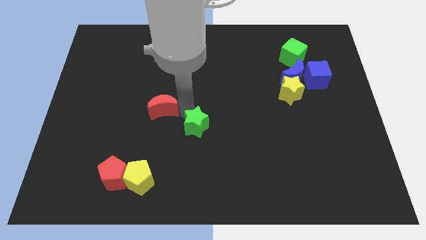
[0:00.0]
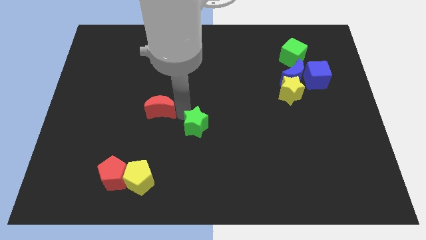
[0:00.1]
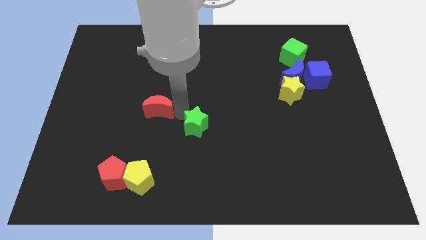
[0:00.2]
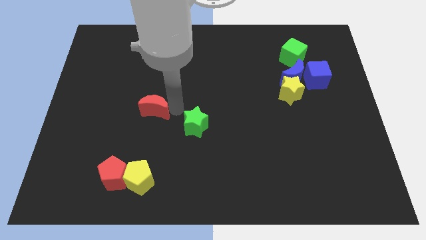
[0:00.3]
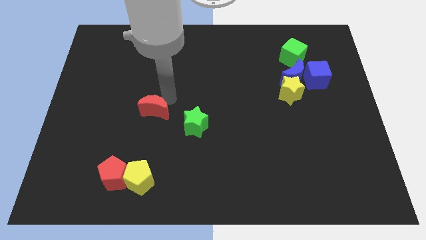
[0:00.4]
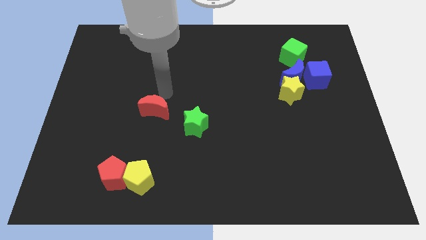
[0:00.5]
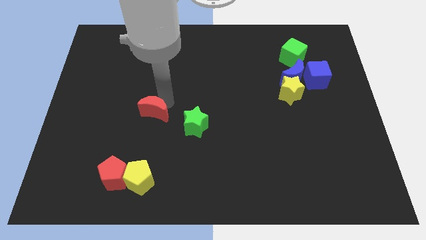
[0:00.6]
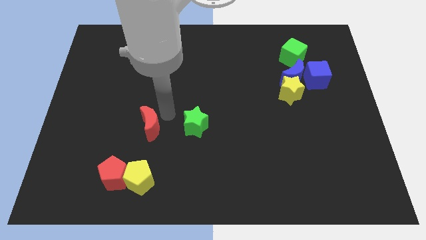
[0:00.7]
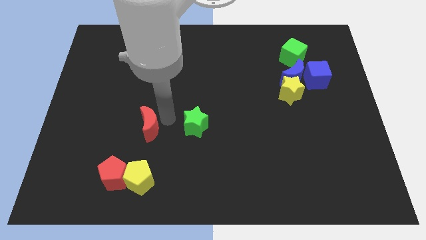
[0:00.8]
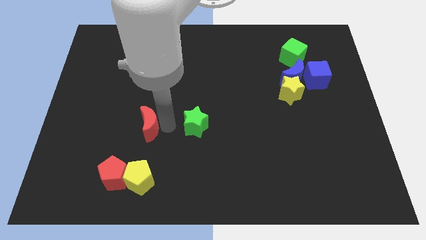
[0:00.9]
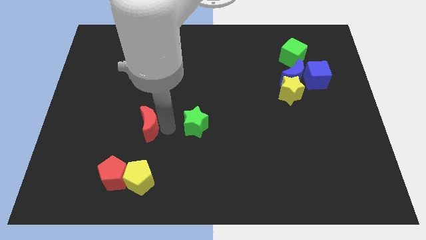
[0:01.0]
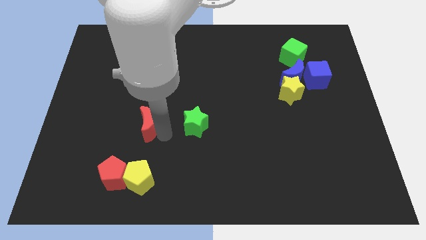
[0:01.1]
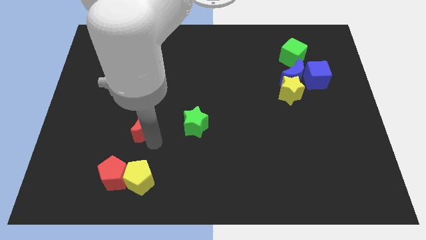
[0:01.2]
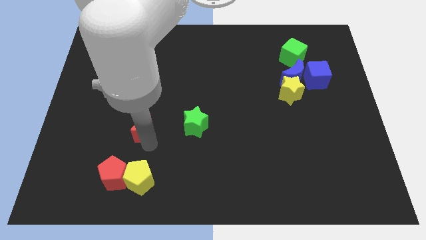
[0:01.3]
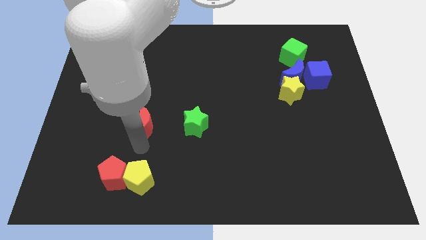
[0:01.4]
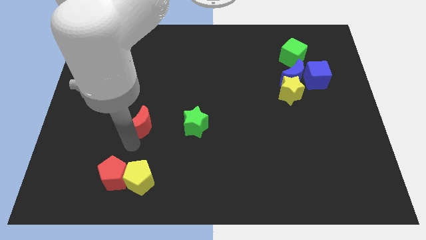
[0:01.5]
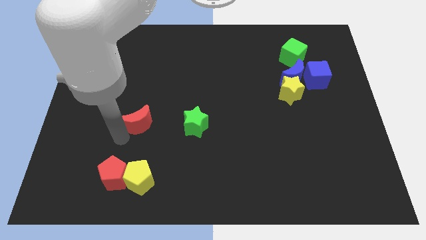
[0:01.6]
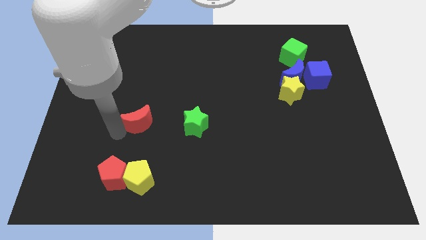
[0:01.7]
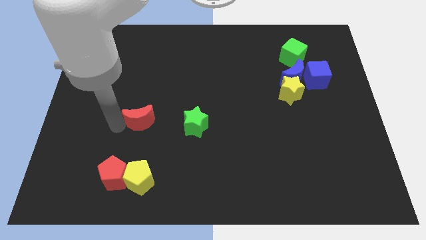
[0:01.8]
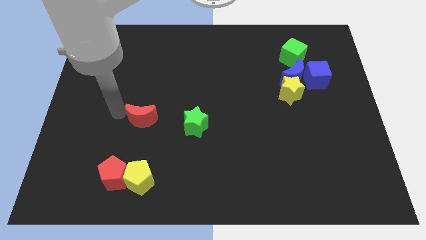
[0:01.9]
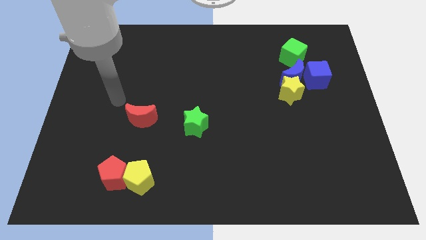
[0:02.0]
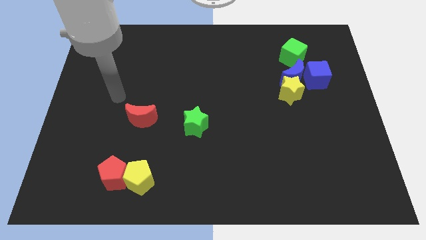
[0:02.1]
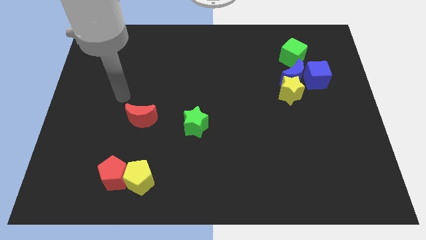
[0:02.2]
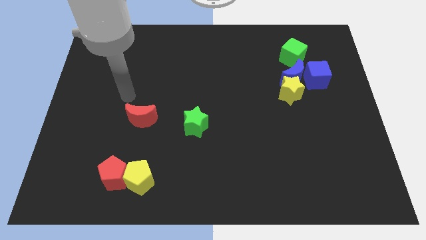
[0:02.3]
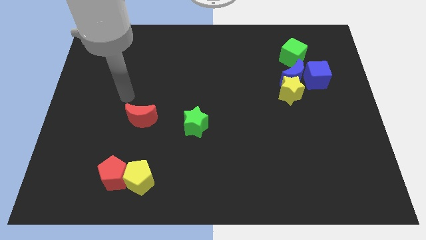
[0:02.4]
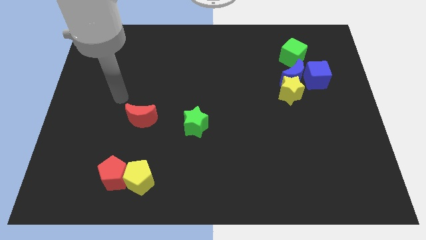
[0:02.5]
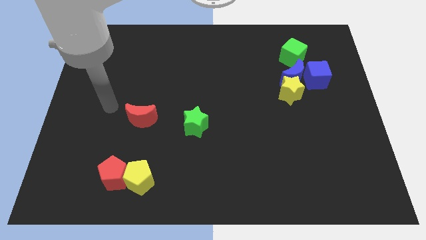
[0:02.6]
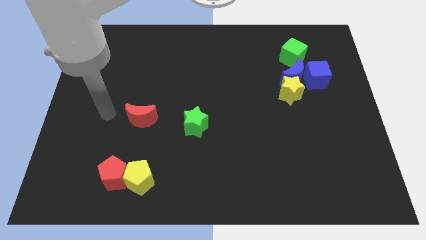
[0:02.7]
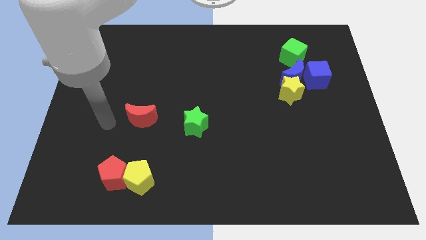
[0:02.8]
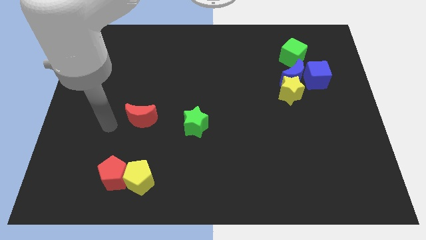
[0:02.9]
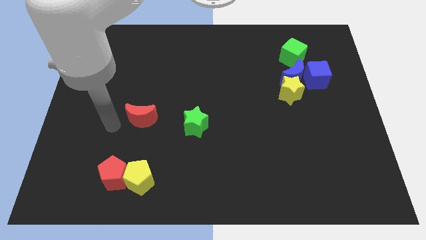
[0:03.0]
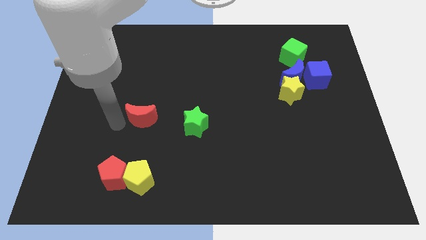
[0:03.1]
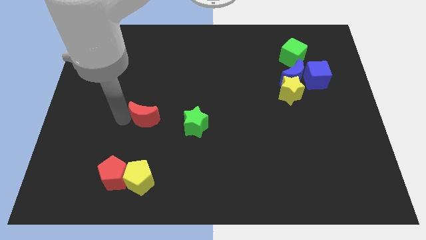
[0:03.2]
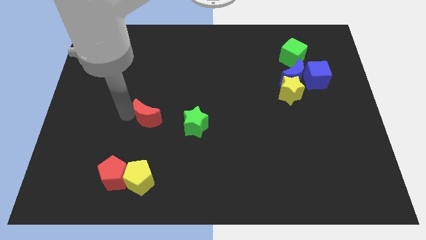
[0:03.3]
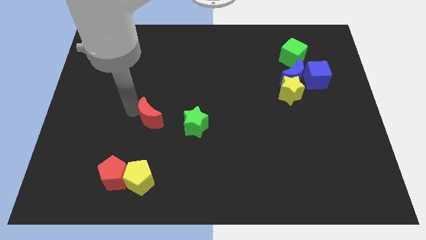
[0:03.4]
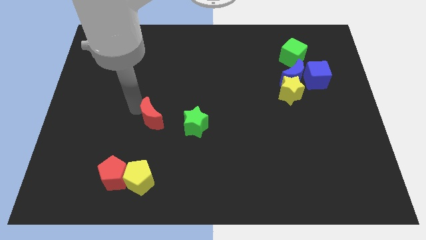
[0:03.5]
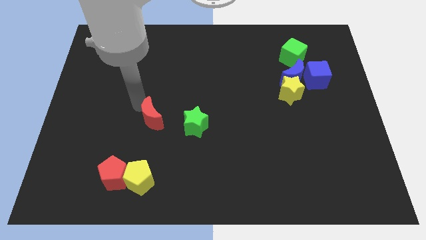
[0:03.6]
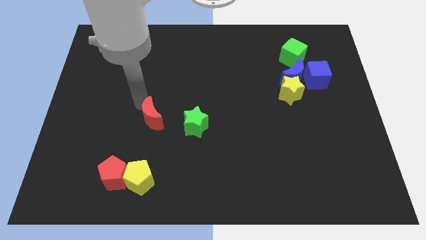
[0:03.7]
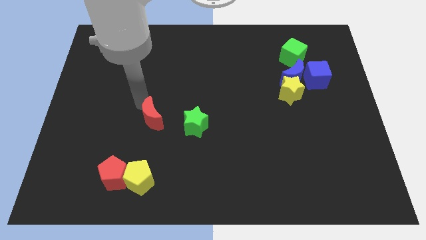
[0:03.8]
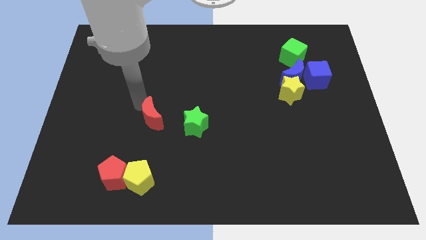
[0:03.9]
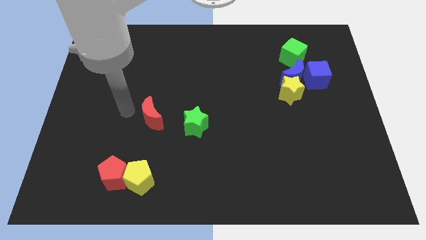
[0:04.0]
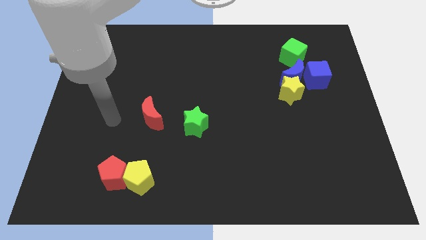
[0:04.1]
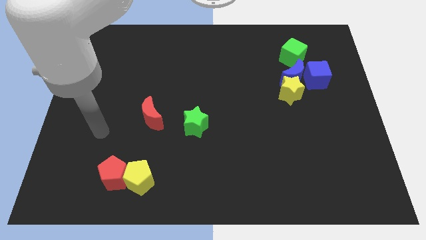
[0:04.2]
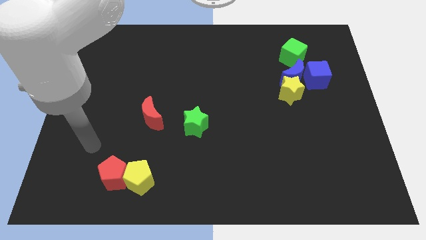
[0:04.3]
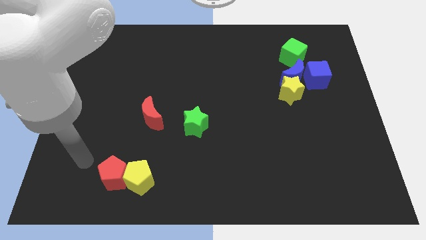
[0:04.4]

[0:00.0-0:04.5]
turn the red crescent in clockwise direction

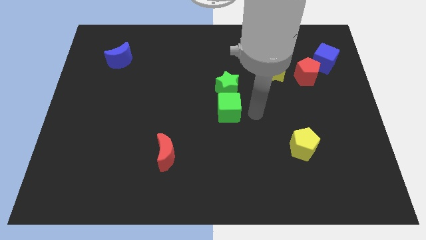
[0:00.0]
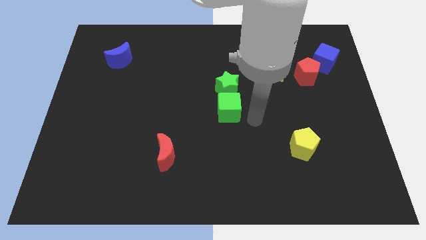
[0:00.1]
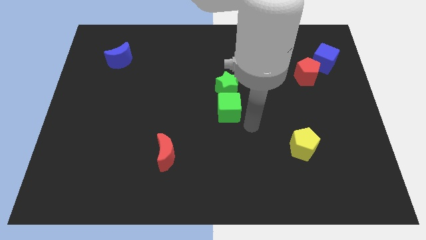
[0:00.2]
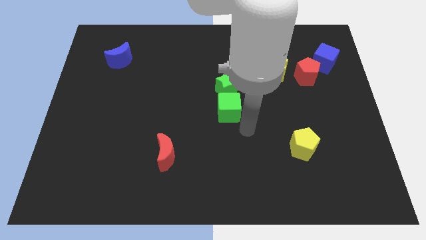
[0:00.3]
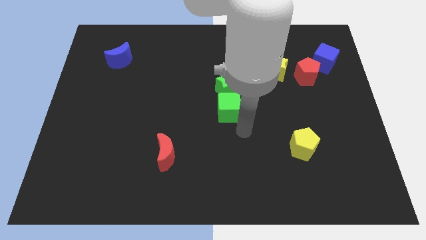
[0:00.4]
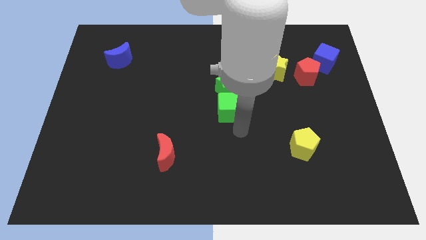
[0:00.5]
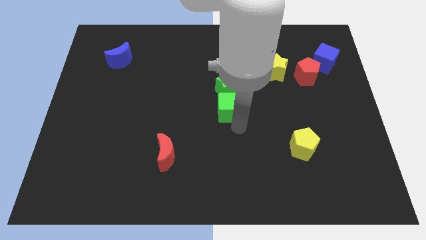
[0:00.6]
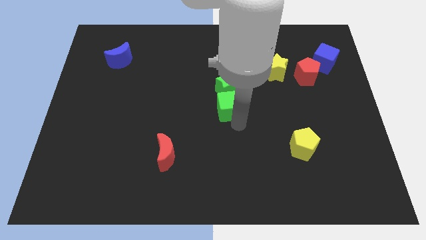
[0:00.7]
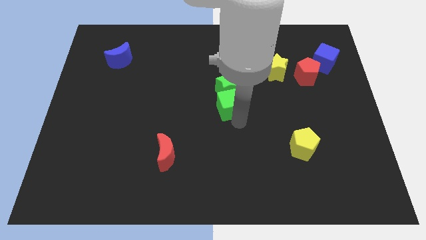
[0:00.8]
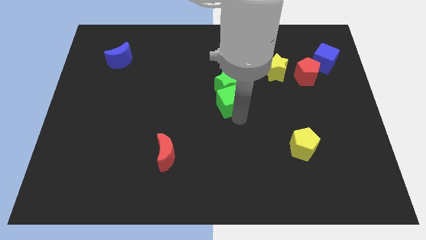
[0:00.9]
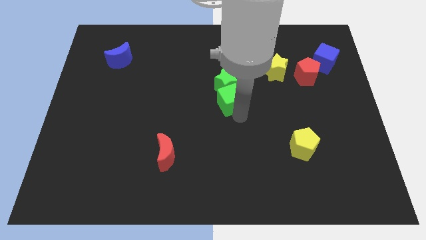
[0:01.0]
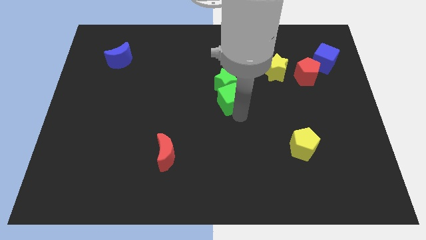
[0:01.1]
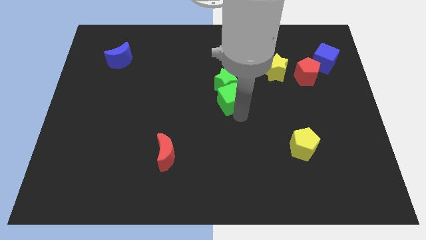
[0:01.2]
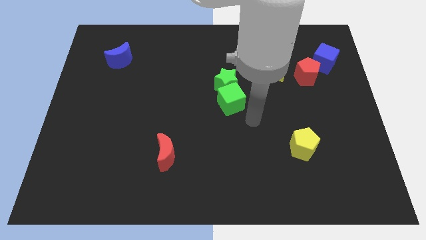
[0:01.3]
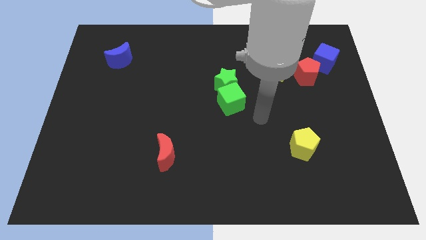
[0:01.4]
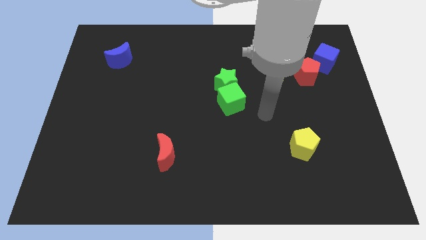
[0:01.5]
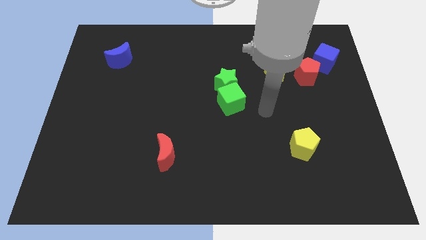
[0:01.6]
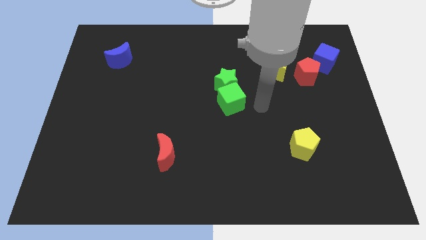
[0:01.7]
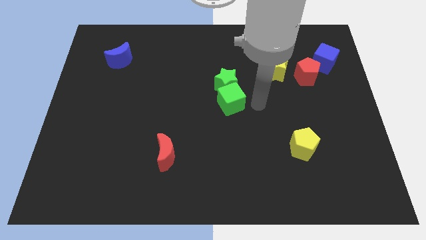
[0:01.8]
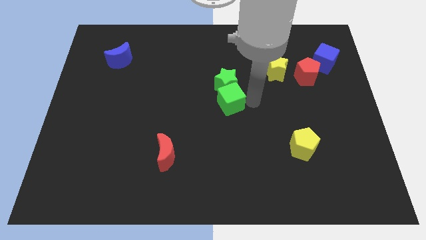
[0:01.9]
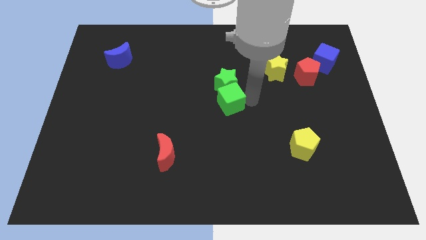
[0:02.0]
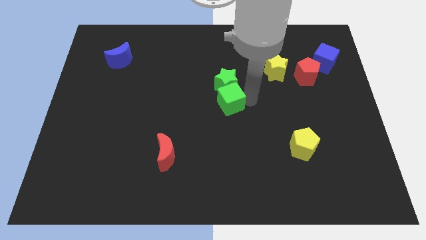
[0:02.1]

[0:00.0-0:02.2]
combine green cube and green star

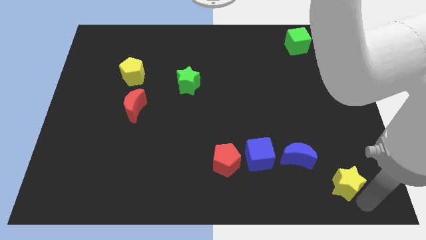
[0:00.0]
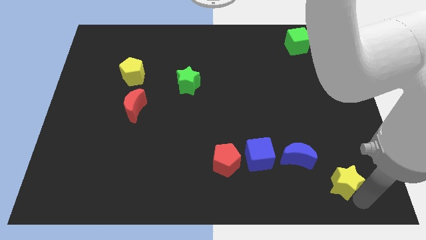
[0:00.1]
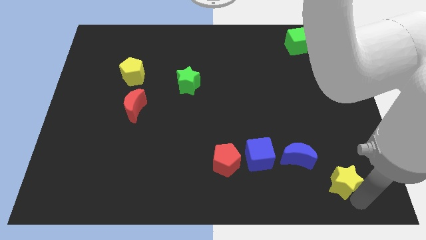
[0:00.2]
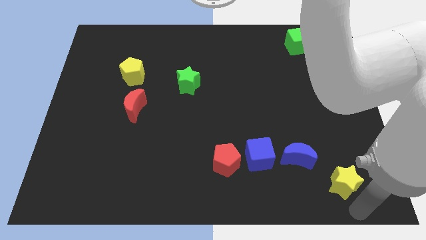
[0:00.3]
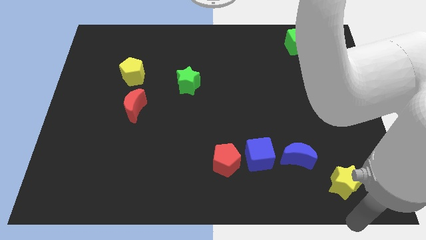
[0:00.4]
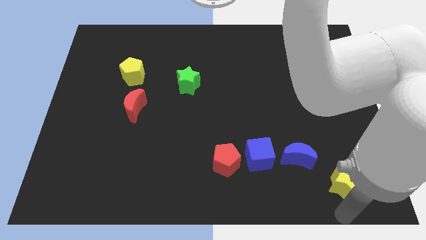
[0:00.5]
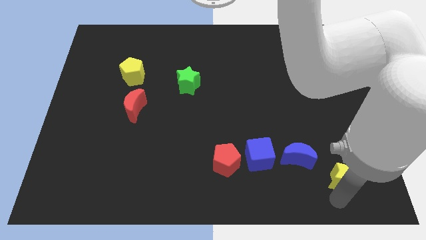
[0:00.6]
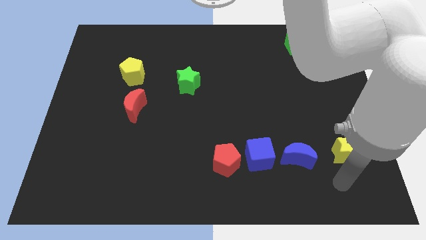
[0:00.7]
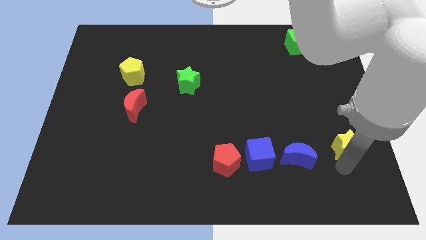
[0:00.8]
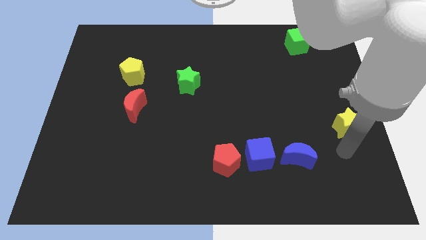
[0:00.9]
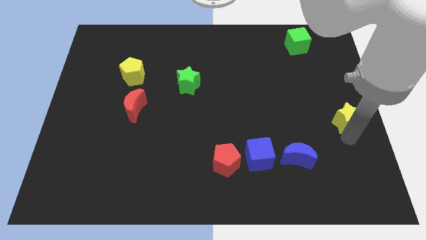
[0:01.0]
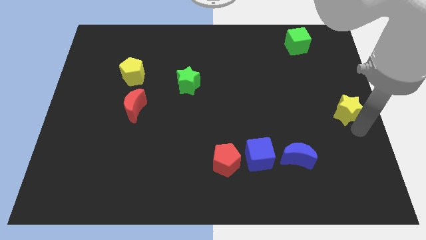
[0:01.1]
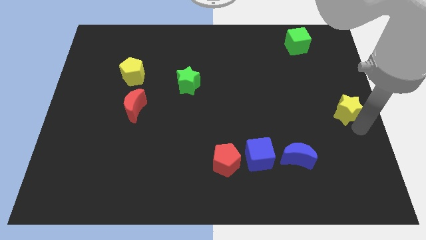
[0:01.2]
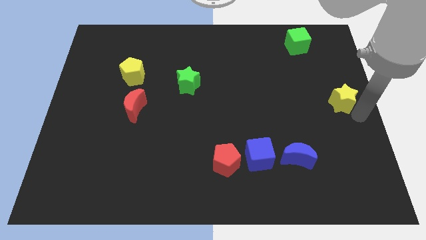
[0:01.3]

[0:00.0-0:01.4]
move the yellow star to the center right of the table

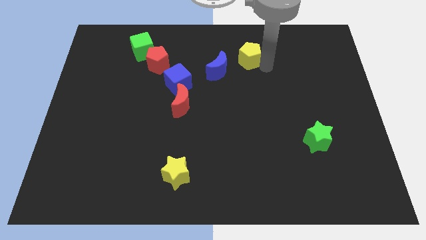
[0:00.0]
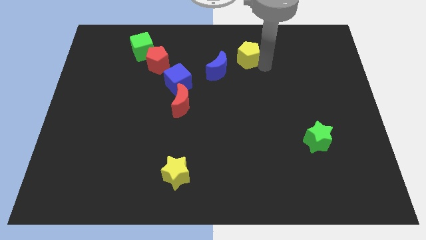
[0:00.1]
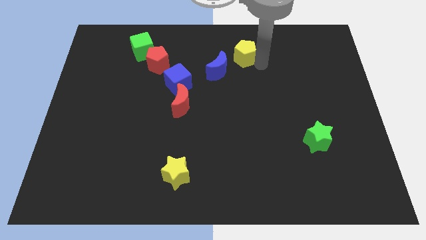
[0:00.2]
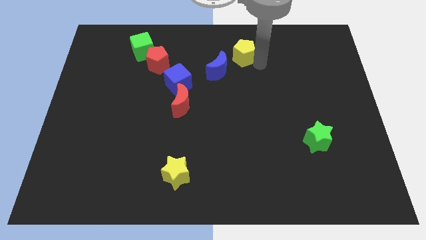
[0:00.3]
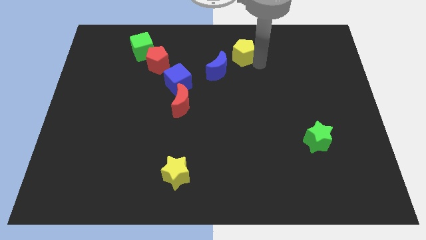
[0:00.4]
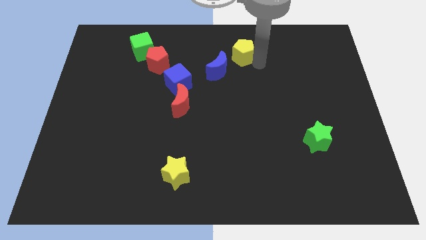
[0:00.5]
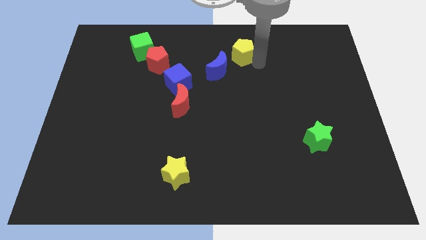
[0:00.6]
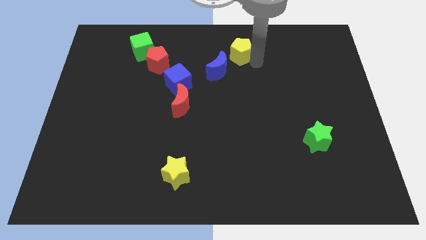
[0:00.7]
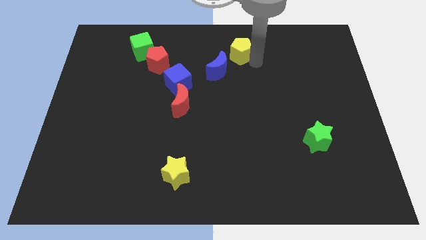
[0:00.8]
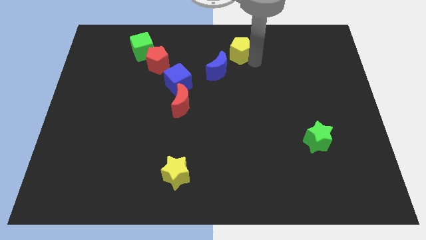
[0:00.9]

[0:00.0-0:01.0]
push the yellow pentagon to the blue crescent
